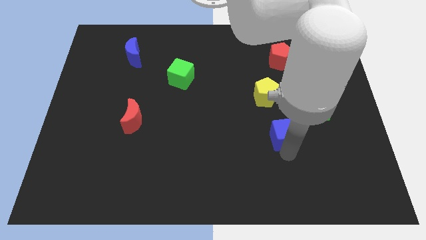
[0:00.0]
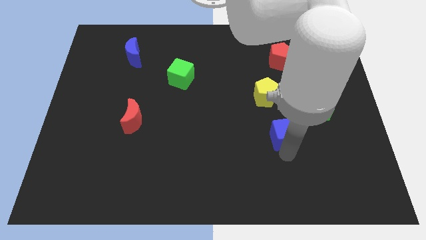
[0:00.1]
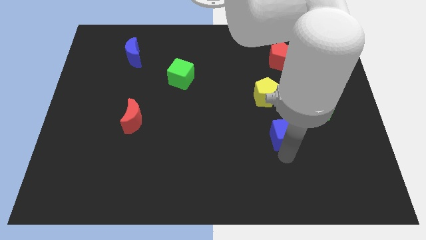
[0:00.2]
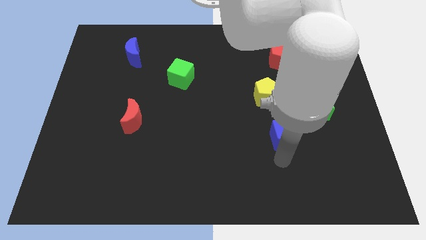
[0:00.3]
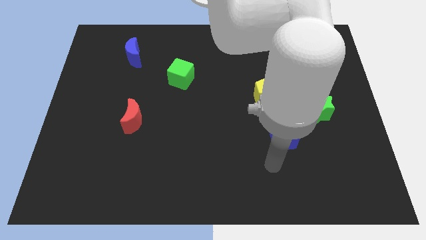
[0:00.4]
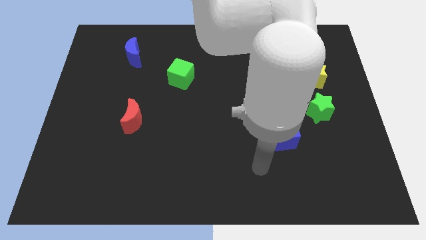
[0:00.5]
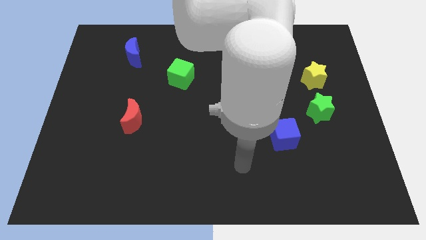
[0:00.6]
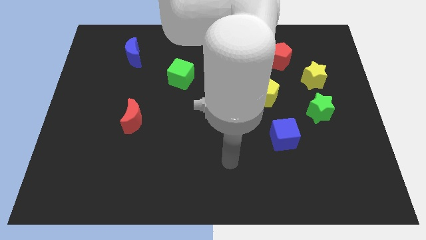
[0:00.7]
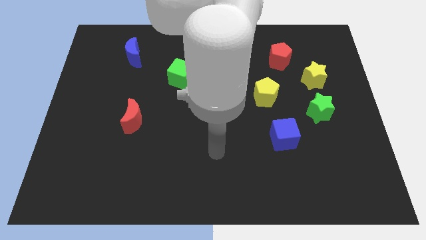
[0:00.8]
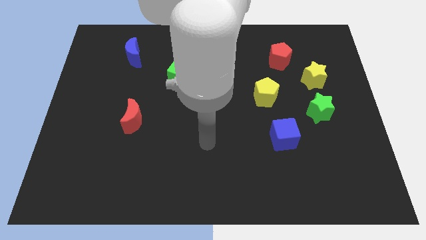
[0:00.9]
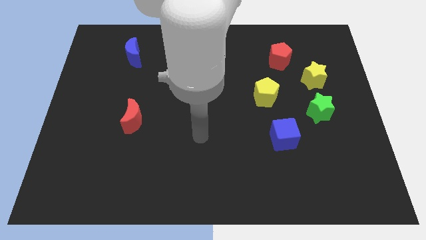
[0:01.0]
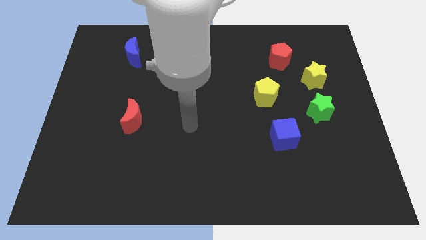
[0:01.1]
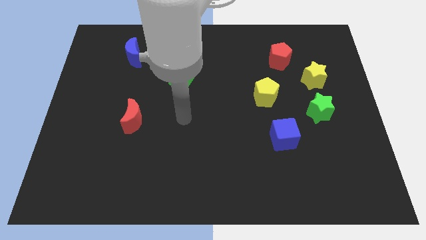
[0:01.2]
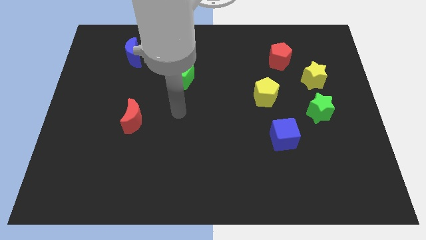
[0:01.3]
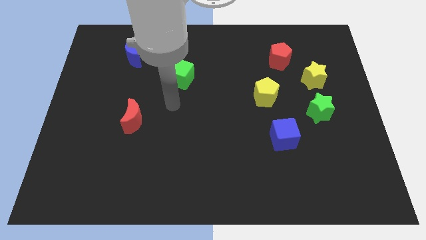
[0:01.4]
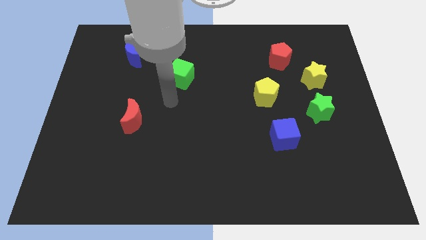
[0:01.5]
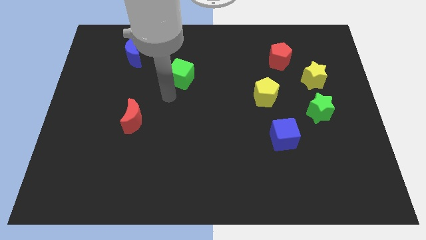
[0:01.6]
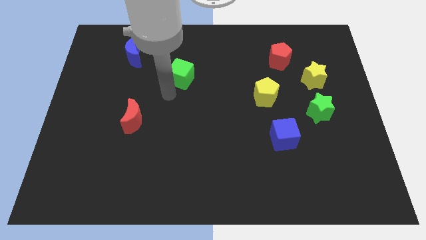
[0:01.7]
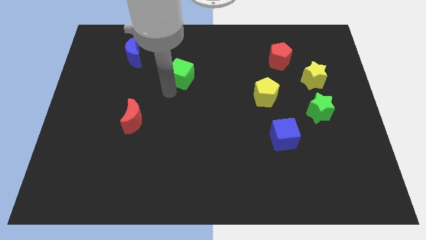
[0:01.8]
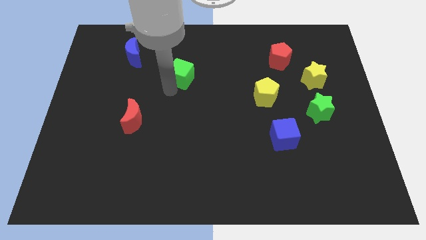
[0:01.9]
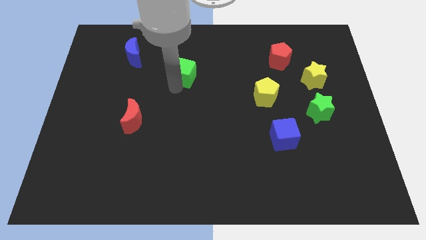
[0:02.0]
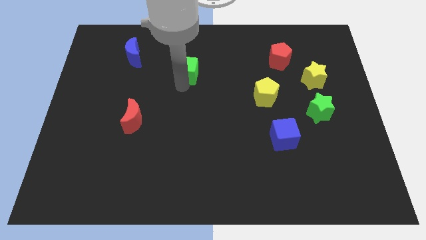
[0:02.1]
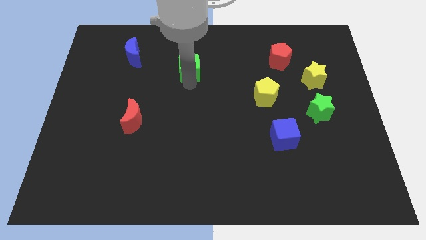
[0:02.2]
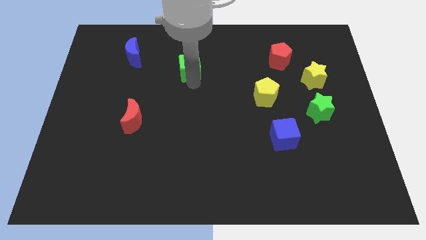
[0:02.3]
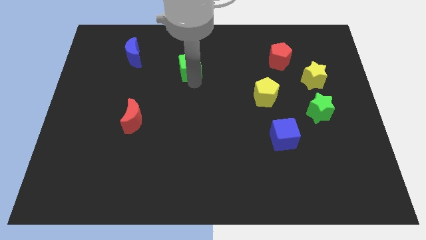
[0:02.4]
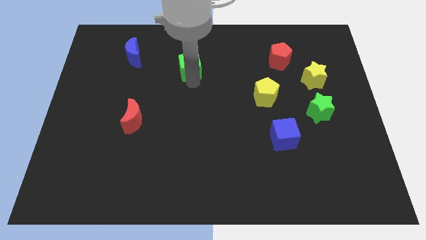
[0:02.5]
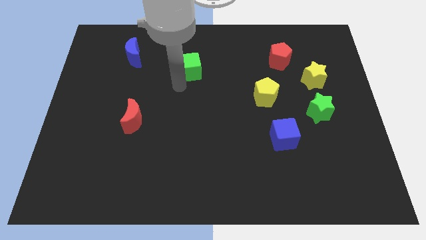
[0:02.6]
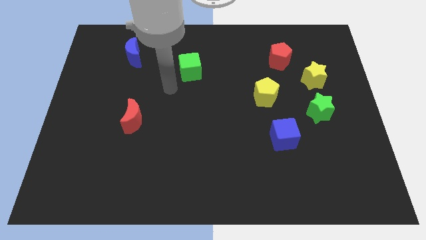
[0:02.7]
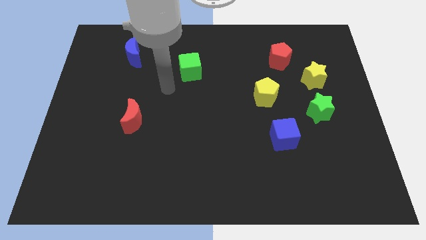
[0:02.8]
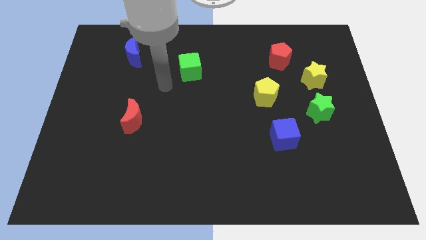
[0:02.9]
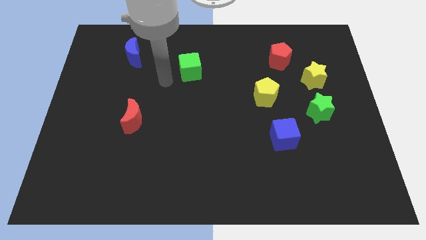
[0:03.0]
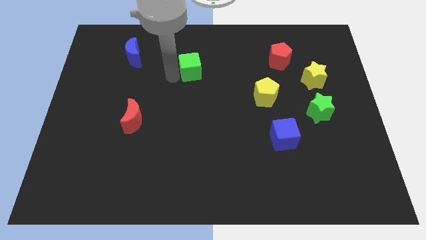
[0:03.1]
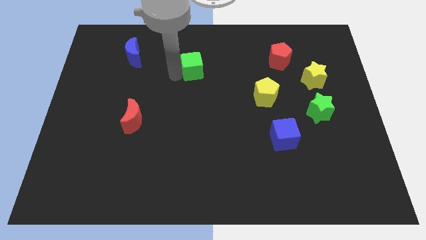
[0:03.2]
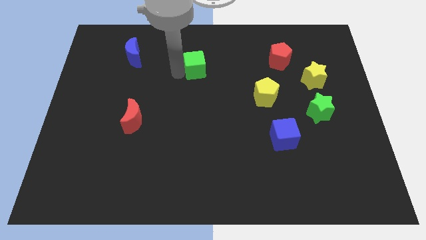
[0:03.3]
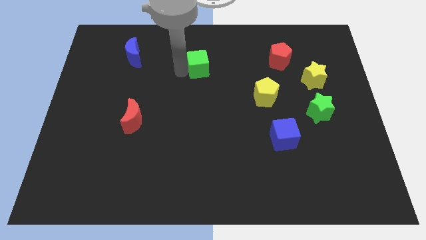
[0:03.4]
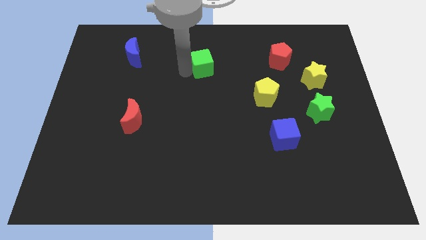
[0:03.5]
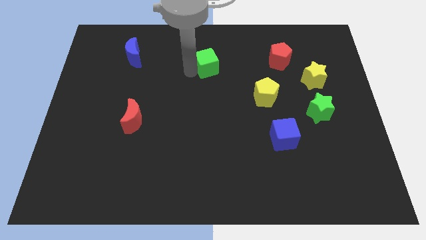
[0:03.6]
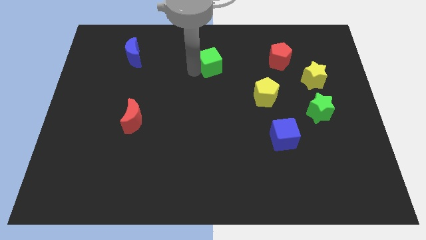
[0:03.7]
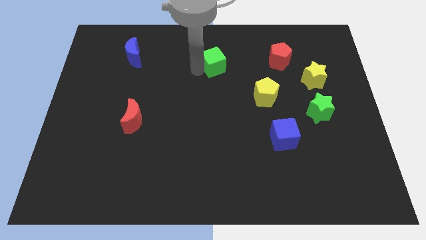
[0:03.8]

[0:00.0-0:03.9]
move your arm close to the green cube

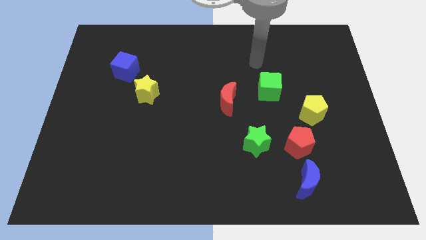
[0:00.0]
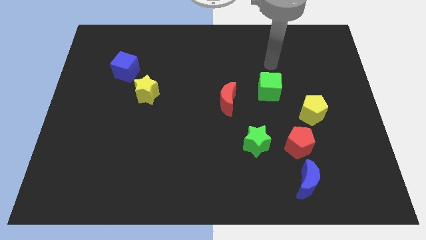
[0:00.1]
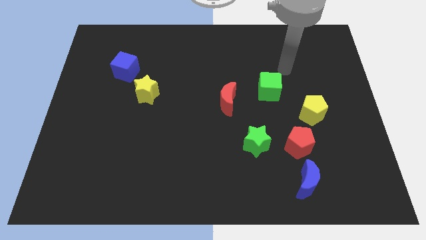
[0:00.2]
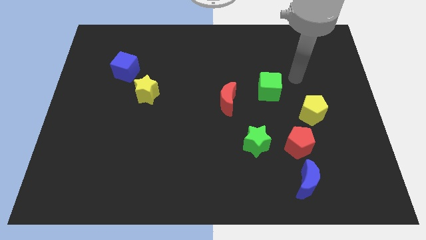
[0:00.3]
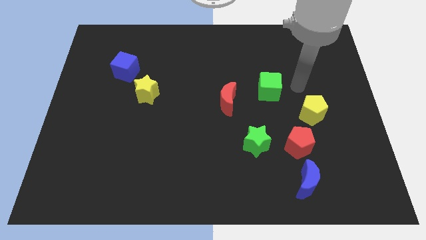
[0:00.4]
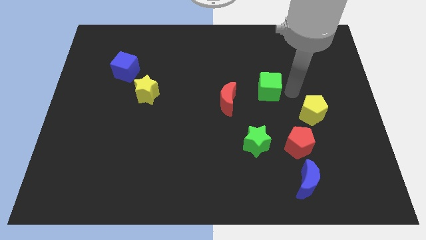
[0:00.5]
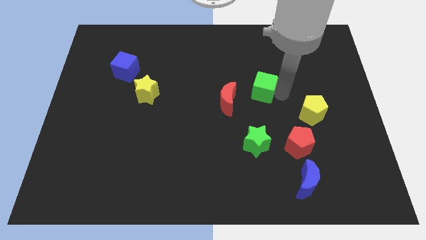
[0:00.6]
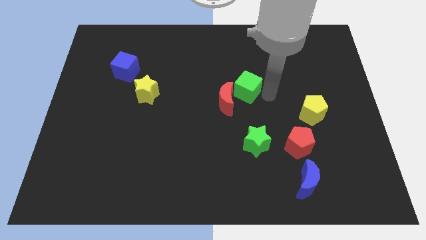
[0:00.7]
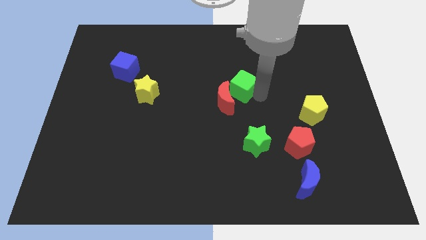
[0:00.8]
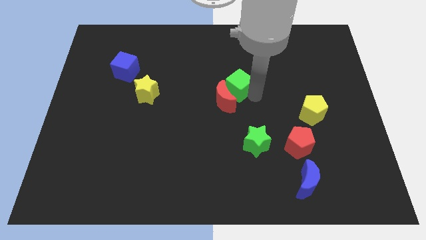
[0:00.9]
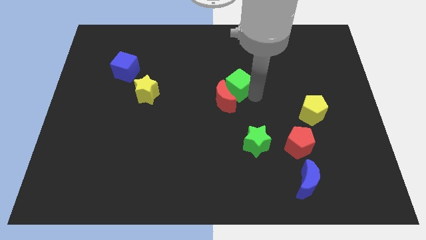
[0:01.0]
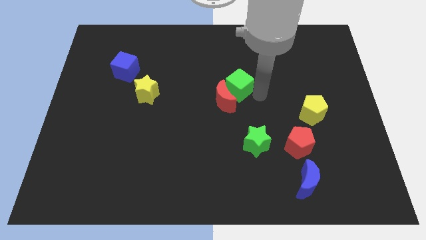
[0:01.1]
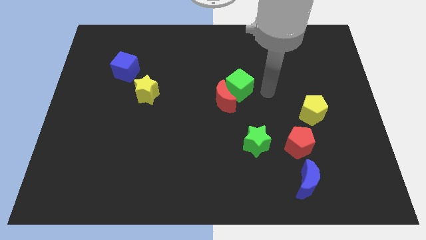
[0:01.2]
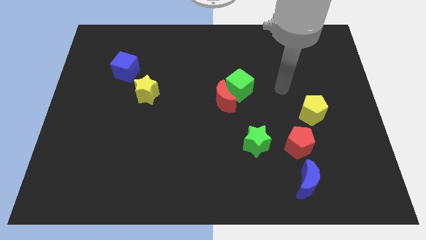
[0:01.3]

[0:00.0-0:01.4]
push green cube into the red moon

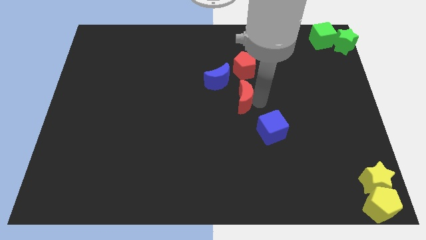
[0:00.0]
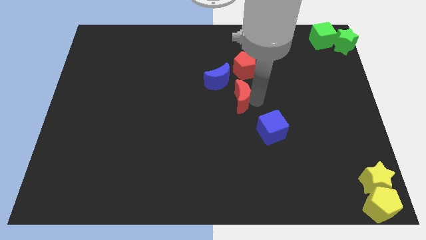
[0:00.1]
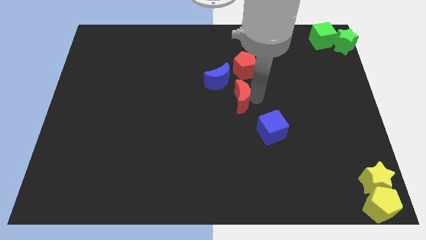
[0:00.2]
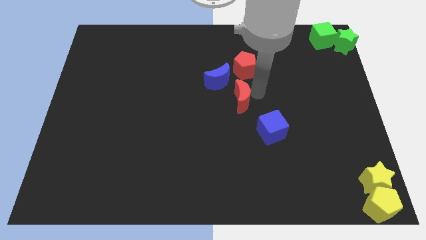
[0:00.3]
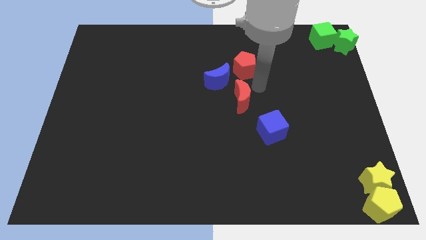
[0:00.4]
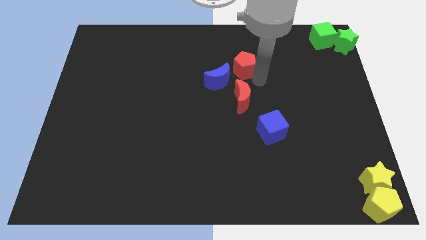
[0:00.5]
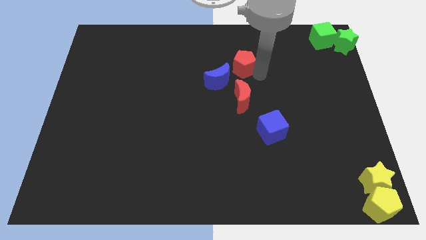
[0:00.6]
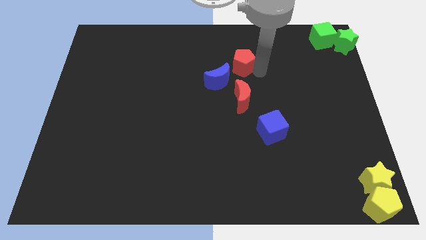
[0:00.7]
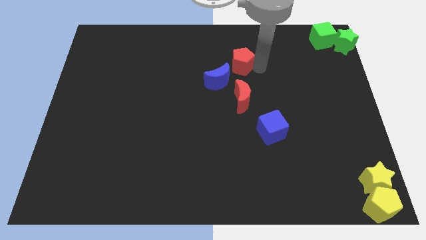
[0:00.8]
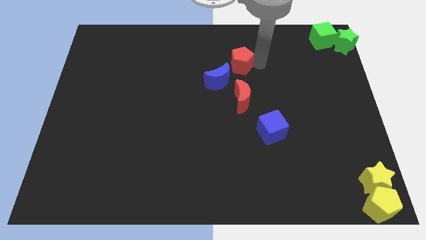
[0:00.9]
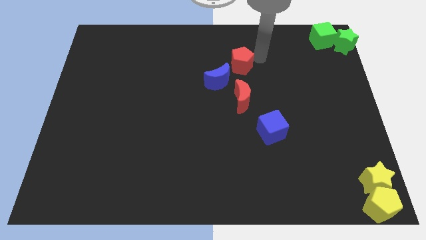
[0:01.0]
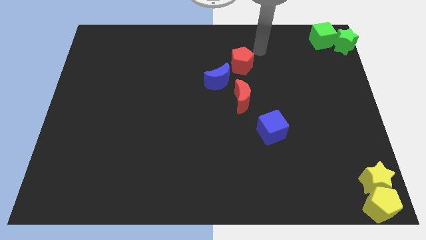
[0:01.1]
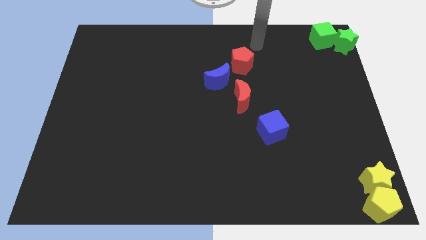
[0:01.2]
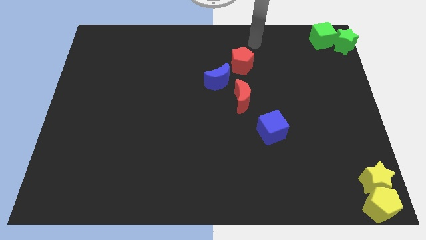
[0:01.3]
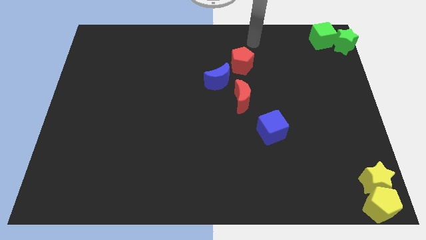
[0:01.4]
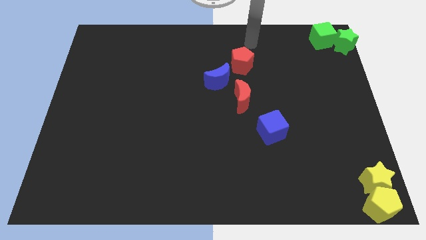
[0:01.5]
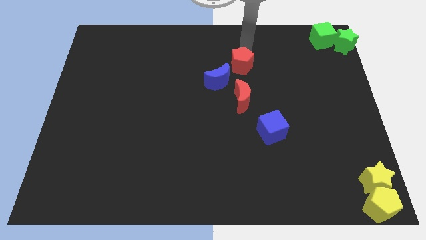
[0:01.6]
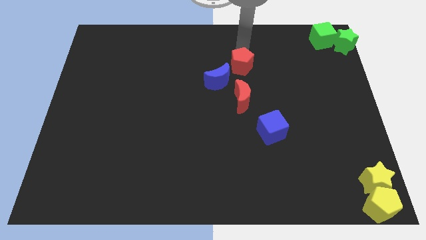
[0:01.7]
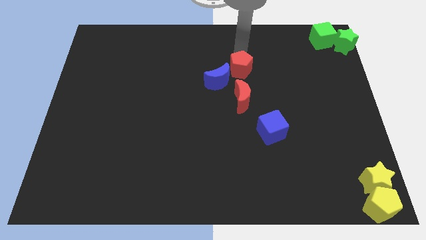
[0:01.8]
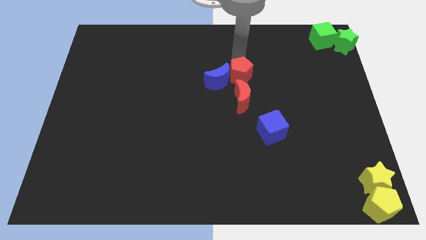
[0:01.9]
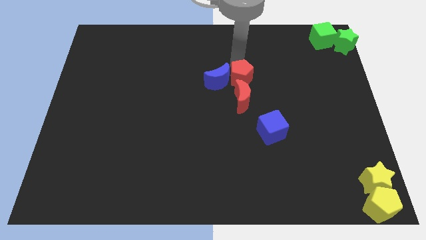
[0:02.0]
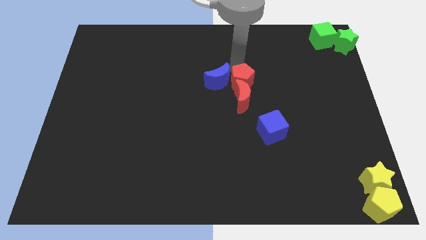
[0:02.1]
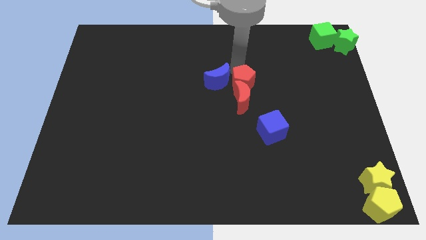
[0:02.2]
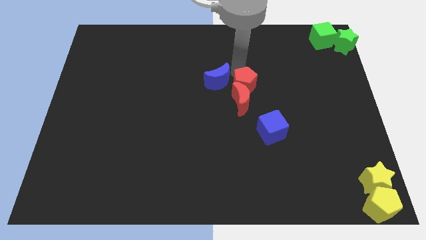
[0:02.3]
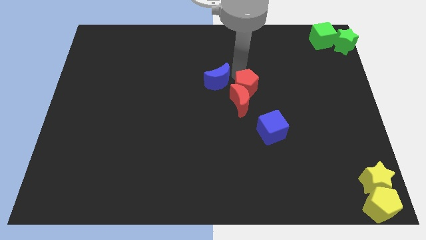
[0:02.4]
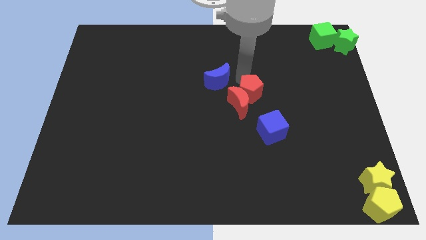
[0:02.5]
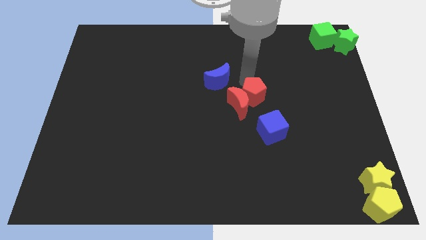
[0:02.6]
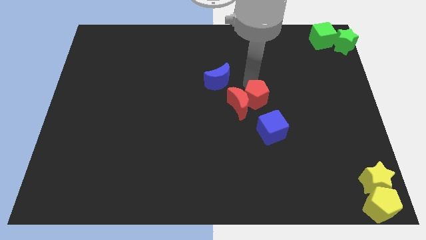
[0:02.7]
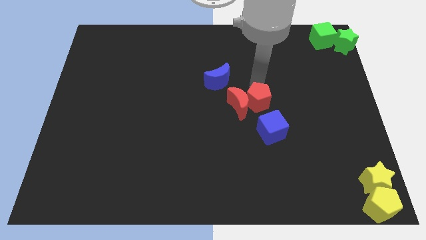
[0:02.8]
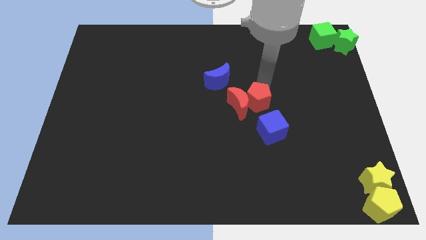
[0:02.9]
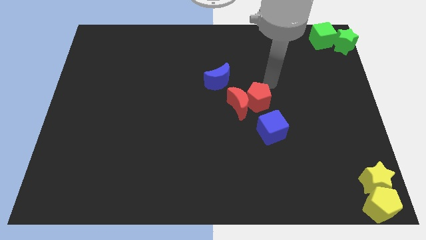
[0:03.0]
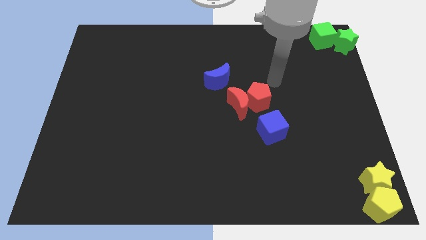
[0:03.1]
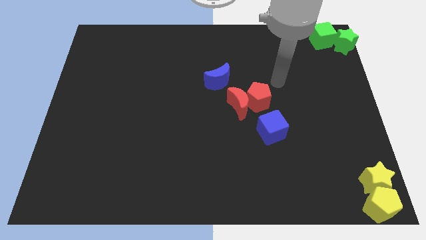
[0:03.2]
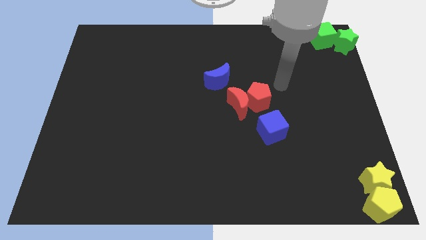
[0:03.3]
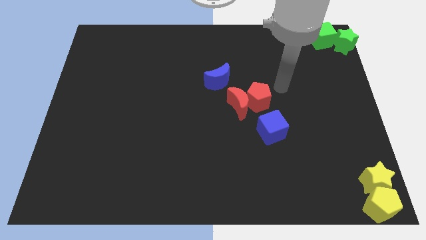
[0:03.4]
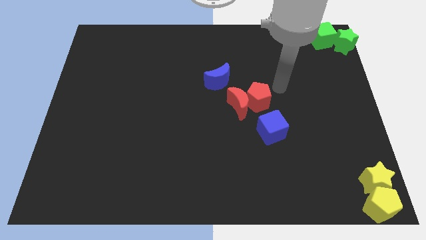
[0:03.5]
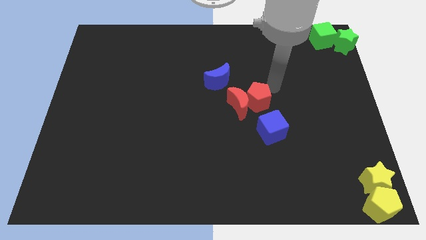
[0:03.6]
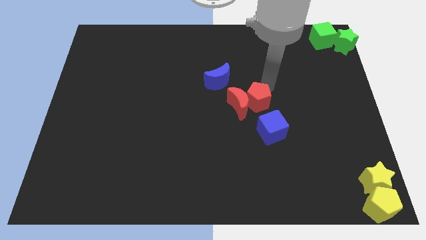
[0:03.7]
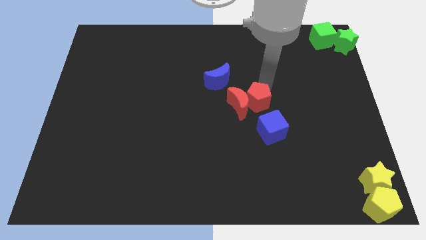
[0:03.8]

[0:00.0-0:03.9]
place the red pentagon right to the red crescent
